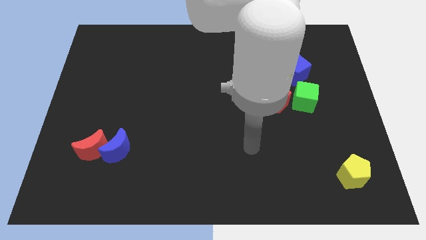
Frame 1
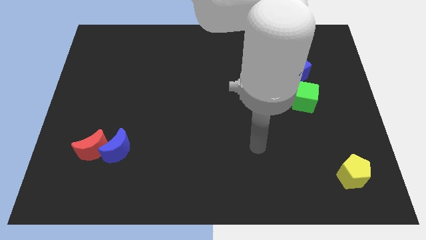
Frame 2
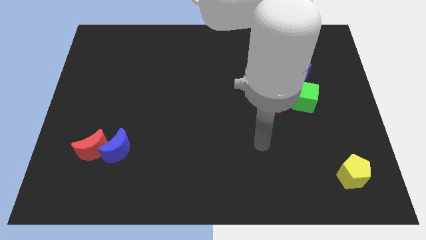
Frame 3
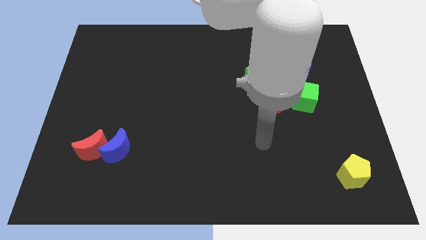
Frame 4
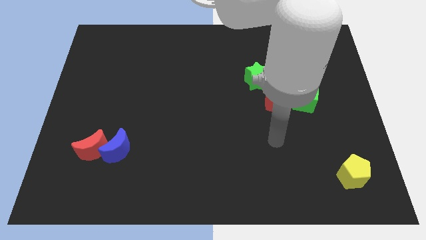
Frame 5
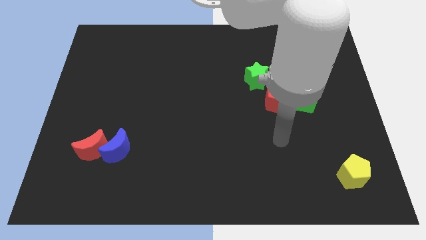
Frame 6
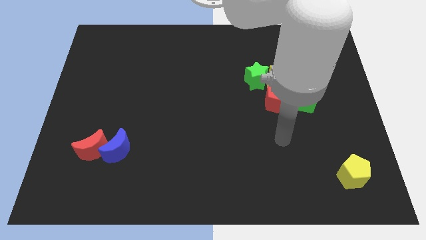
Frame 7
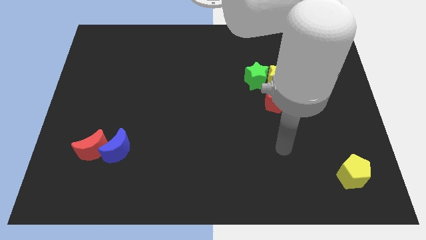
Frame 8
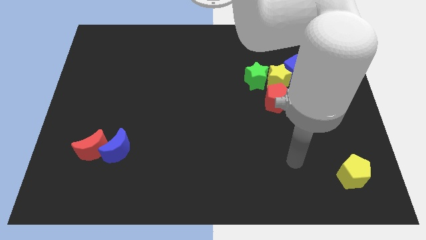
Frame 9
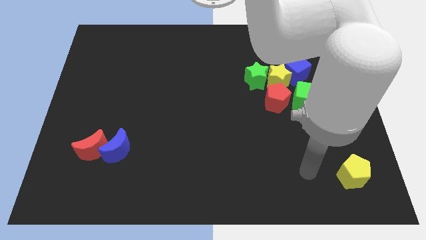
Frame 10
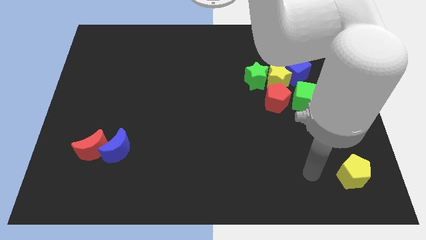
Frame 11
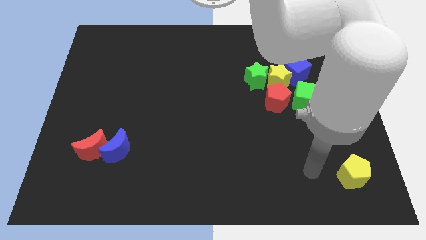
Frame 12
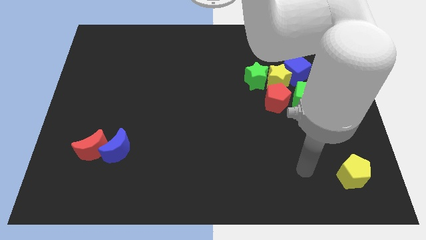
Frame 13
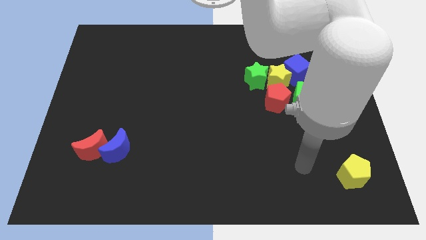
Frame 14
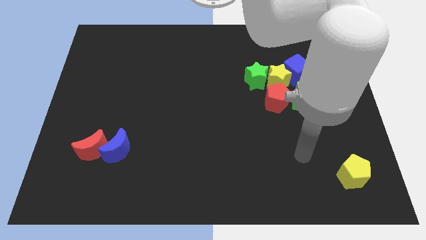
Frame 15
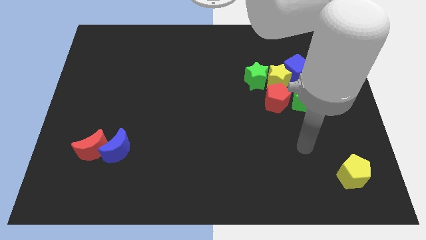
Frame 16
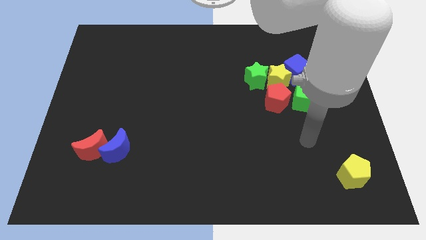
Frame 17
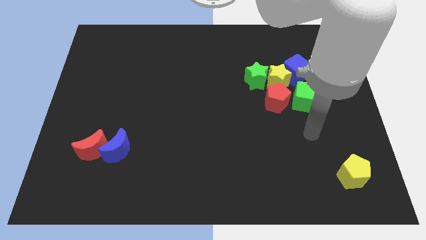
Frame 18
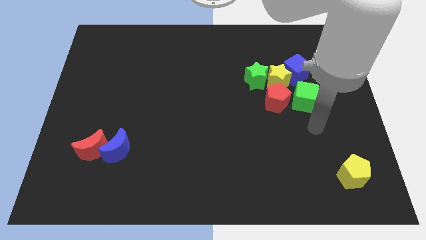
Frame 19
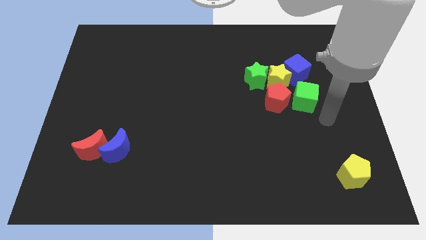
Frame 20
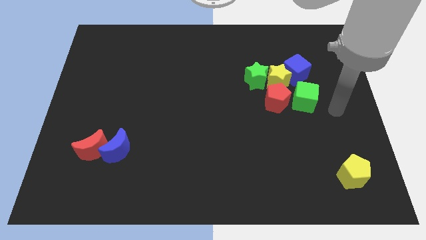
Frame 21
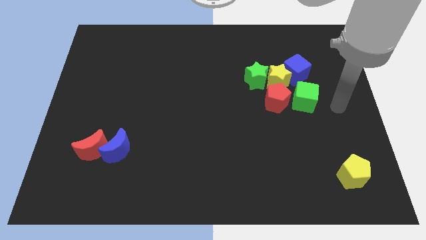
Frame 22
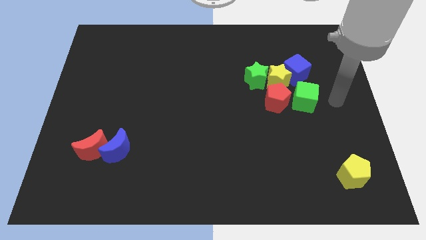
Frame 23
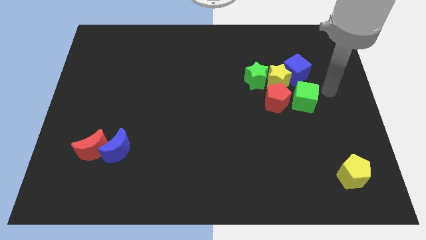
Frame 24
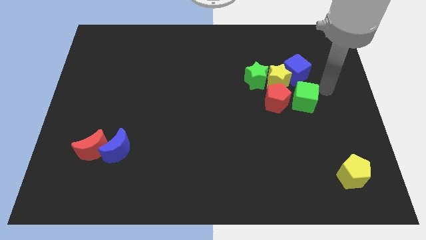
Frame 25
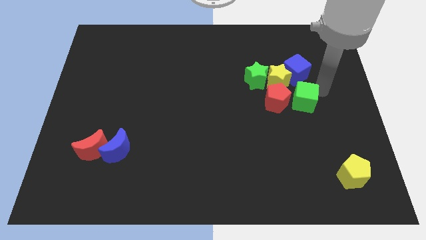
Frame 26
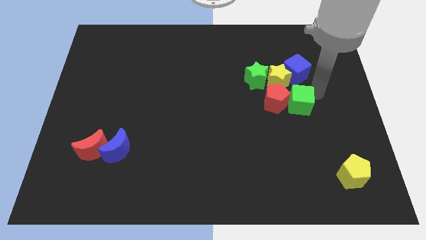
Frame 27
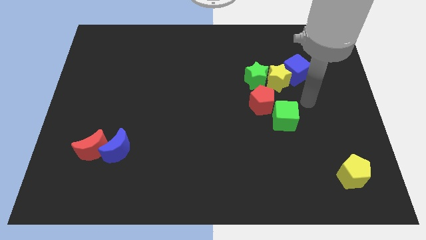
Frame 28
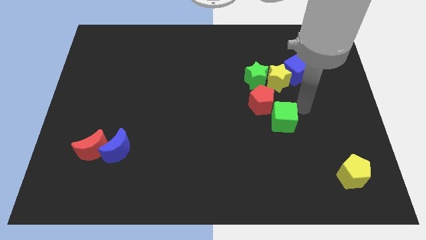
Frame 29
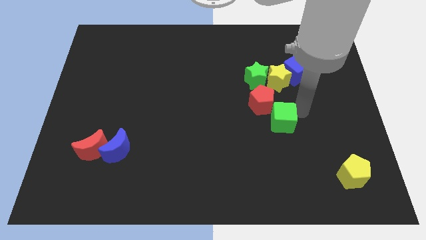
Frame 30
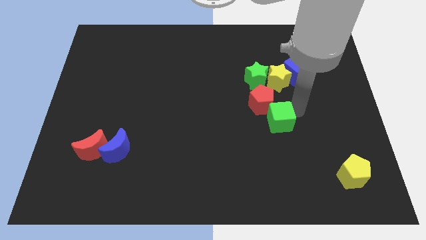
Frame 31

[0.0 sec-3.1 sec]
place the green cube diagonally bottom right of the red pentagon

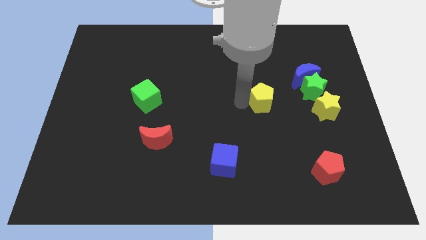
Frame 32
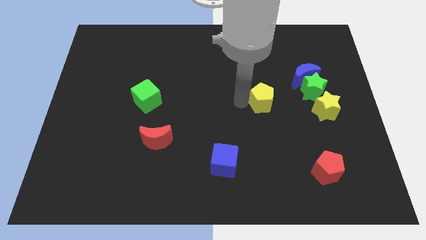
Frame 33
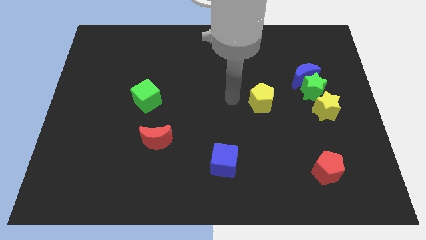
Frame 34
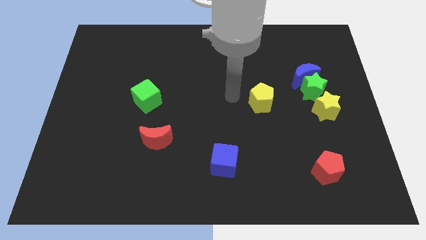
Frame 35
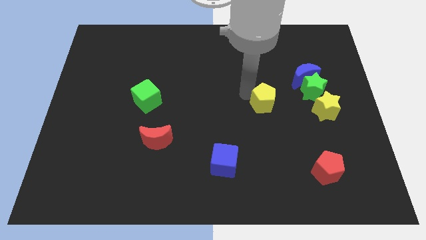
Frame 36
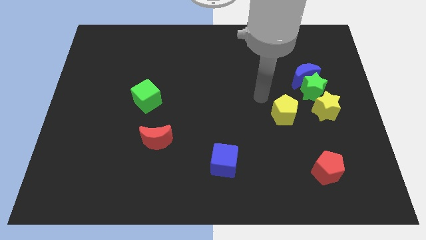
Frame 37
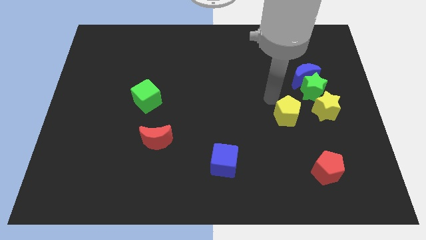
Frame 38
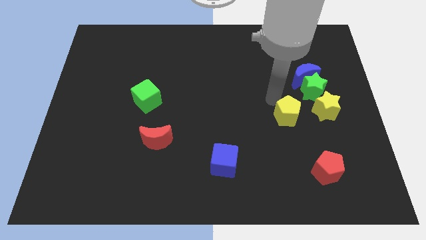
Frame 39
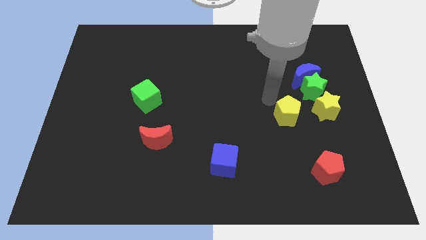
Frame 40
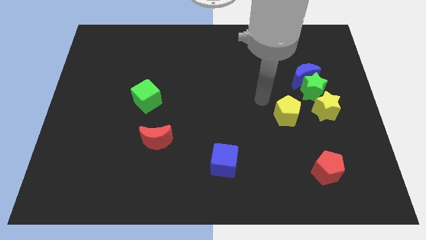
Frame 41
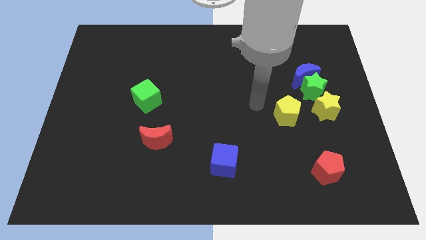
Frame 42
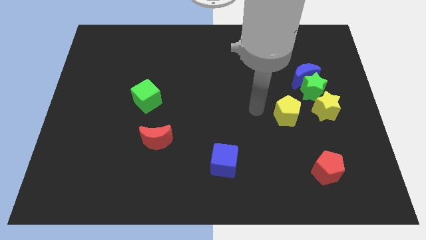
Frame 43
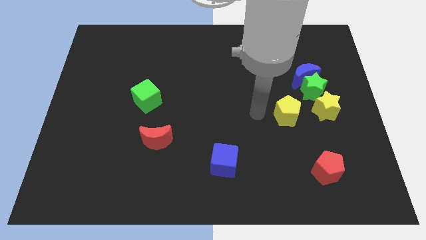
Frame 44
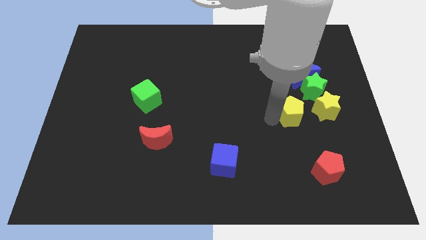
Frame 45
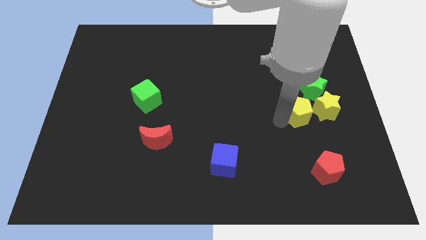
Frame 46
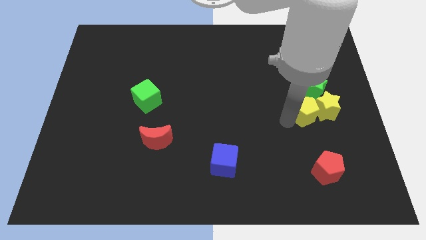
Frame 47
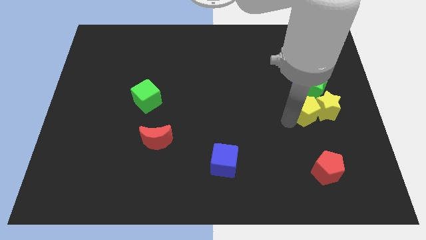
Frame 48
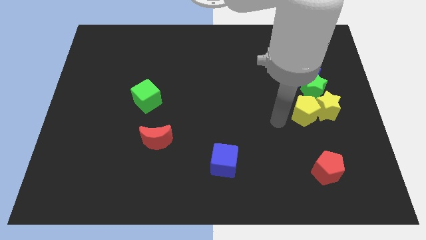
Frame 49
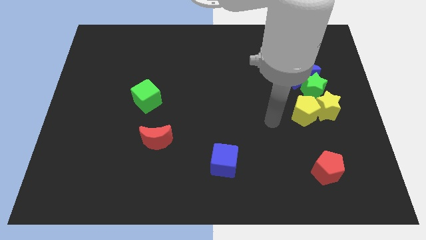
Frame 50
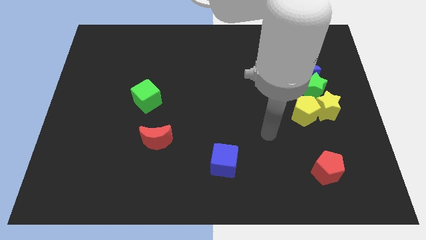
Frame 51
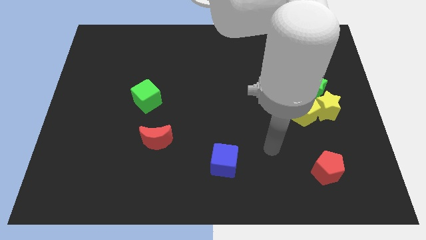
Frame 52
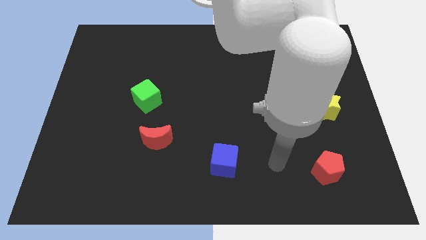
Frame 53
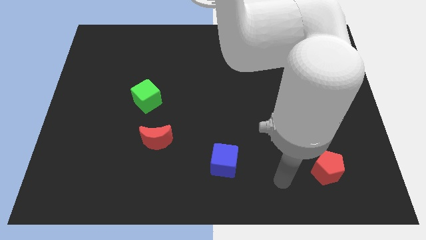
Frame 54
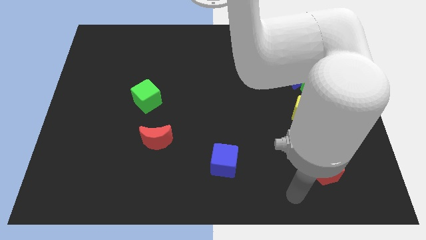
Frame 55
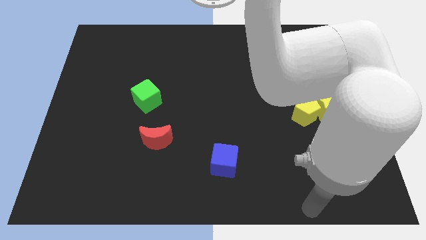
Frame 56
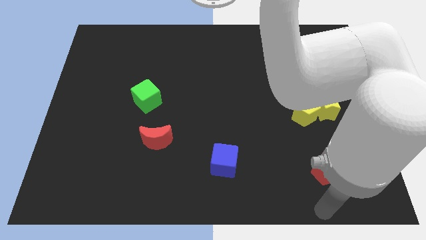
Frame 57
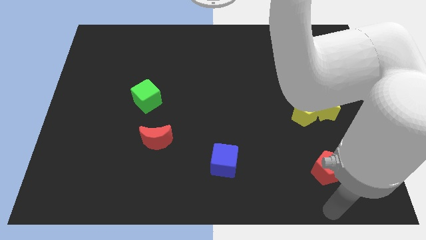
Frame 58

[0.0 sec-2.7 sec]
push yellow pentagon towards yellow star

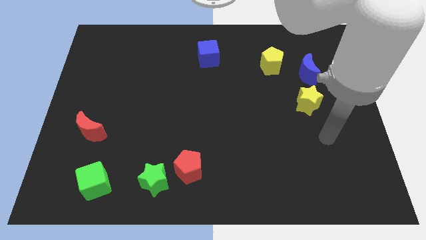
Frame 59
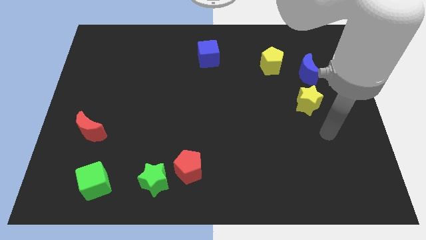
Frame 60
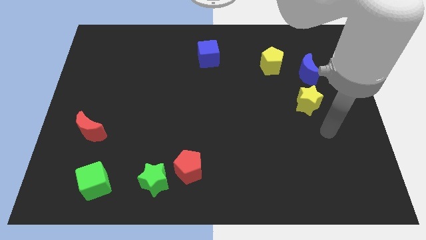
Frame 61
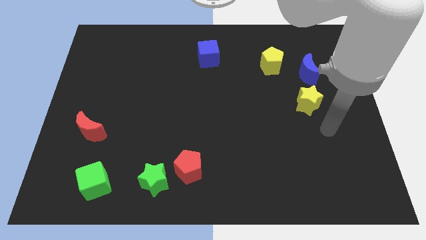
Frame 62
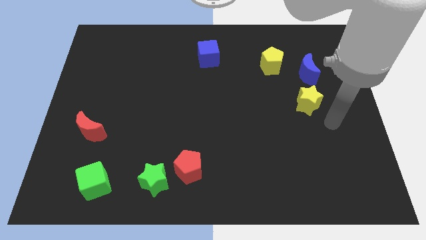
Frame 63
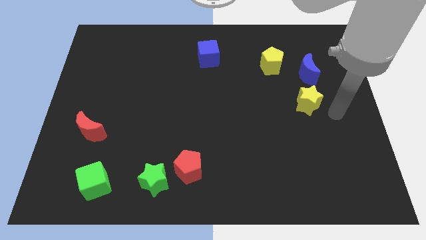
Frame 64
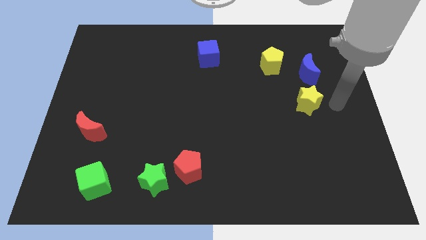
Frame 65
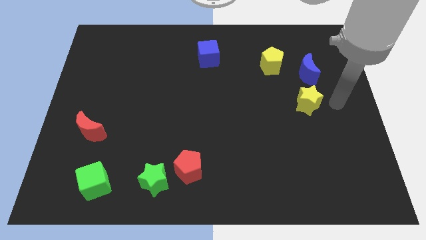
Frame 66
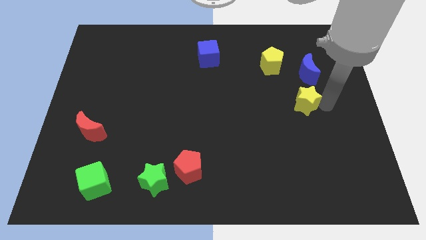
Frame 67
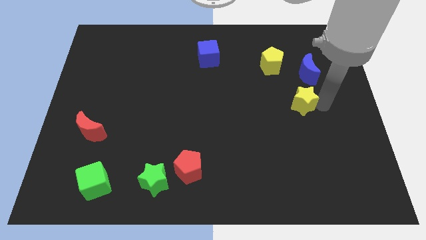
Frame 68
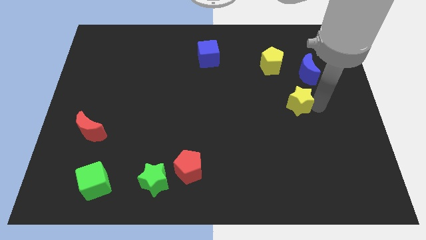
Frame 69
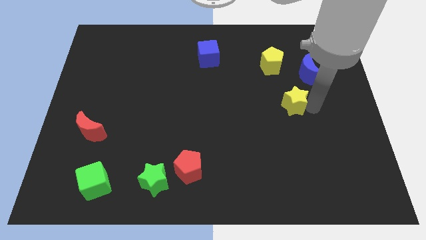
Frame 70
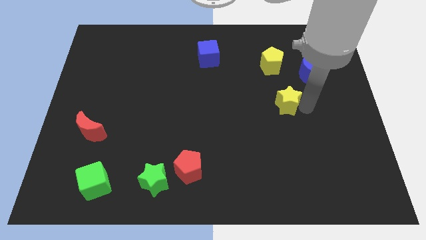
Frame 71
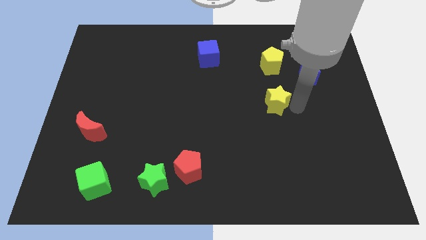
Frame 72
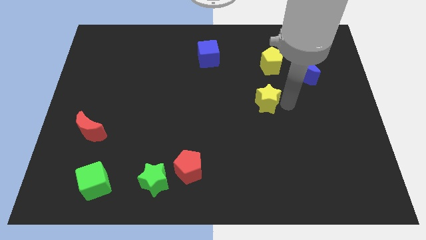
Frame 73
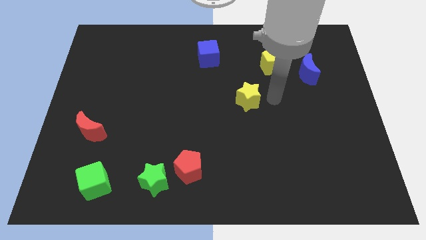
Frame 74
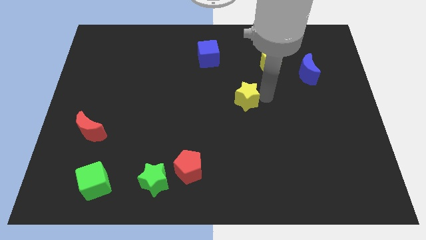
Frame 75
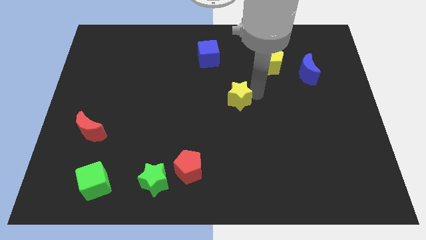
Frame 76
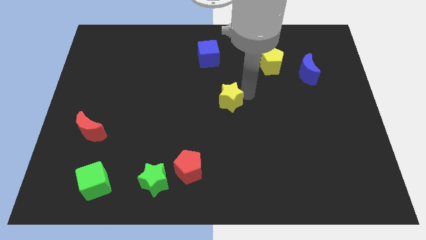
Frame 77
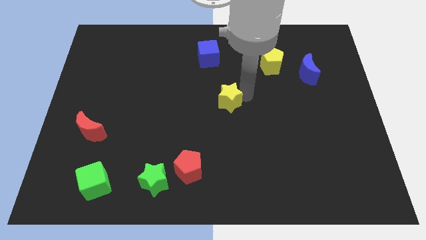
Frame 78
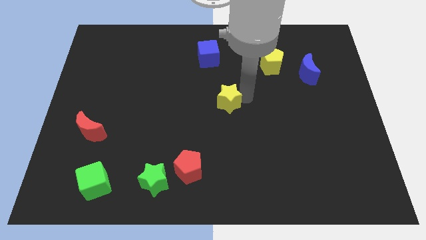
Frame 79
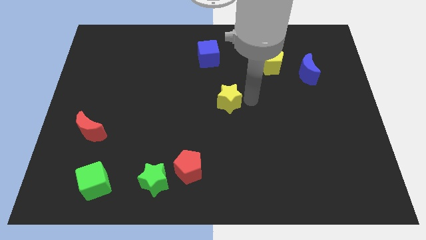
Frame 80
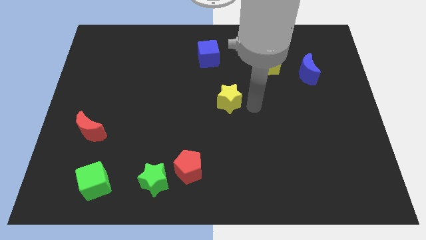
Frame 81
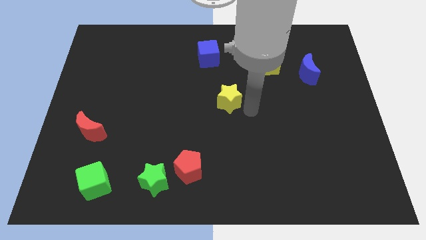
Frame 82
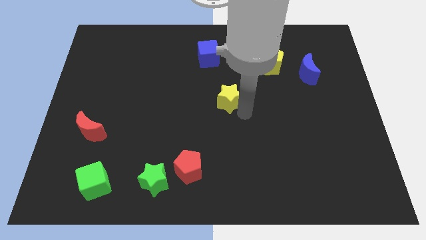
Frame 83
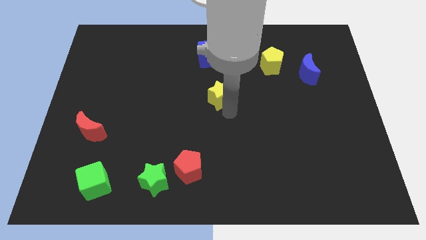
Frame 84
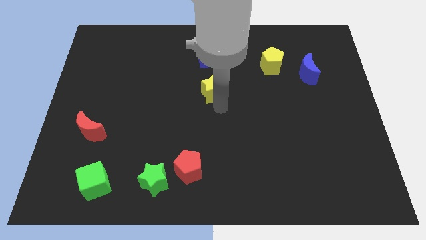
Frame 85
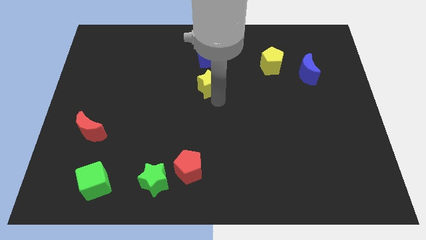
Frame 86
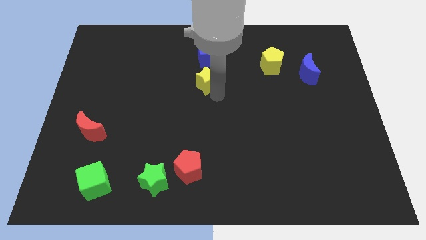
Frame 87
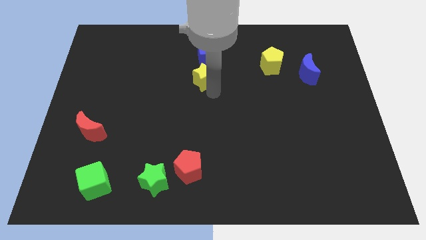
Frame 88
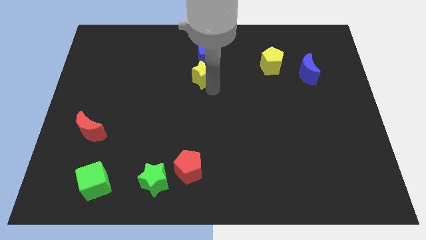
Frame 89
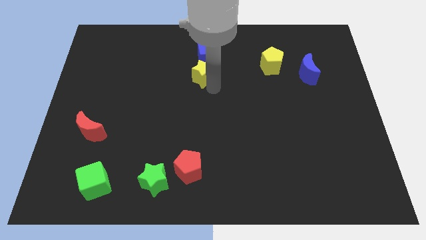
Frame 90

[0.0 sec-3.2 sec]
place the yellow star below the blue cube
